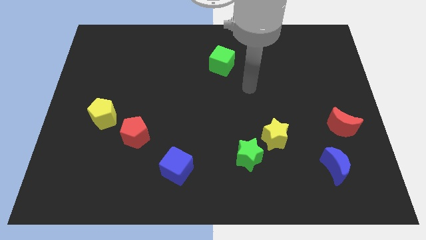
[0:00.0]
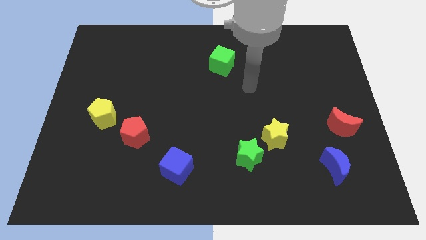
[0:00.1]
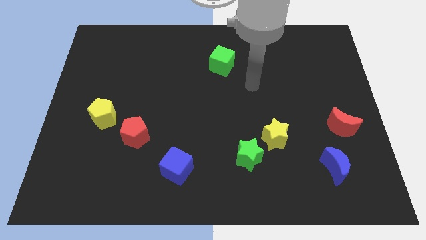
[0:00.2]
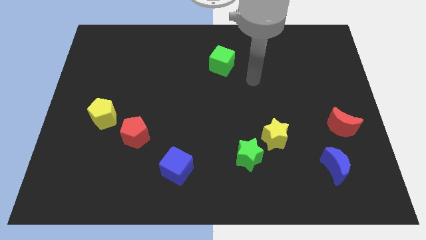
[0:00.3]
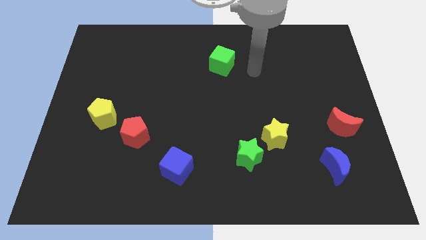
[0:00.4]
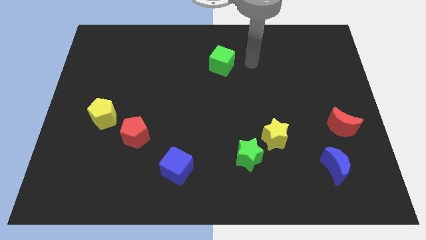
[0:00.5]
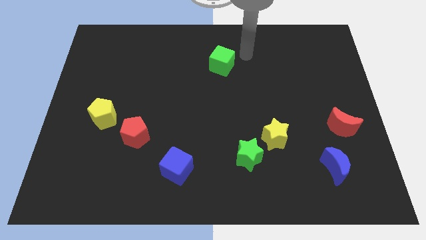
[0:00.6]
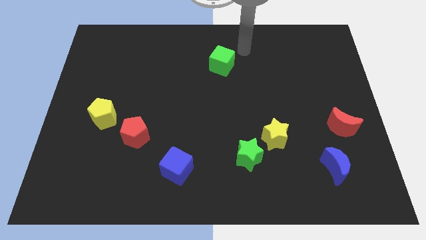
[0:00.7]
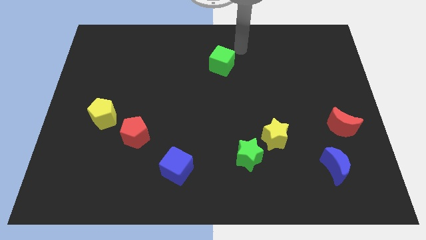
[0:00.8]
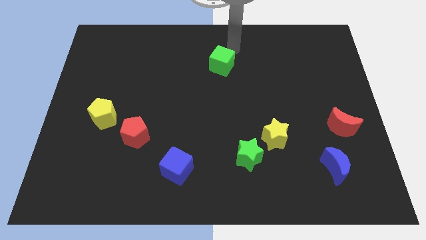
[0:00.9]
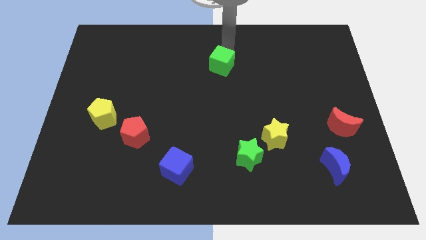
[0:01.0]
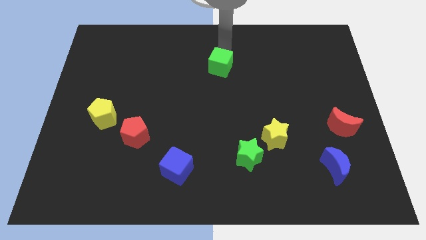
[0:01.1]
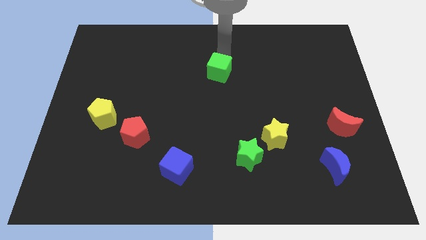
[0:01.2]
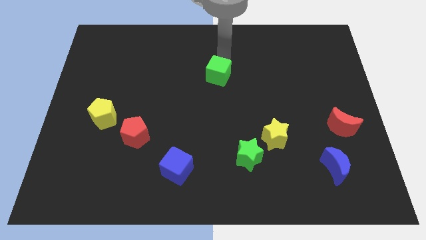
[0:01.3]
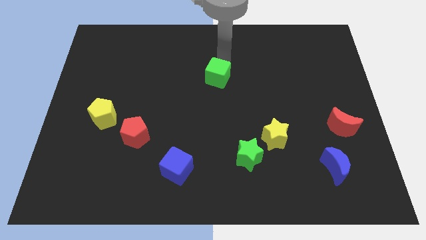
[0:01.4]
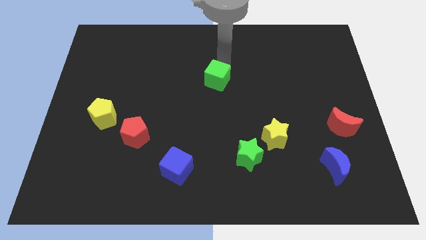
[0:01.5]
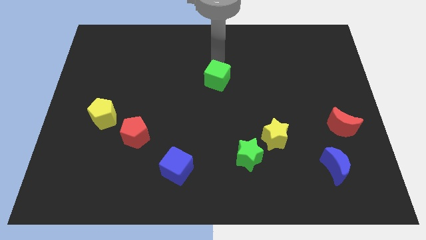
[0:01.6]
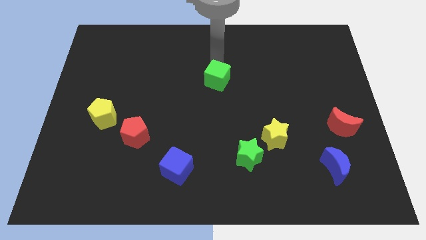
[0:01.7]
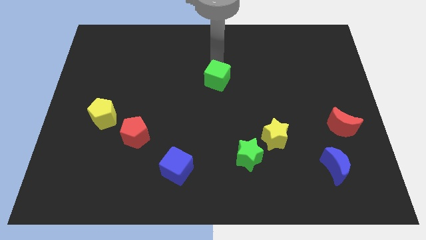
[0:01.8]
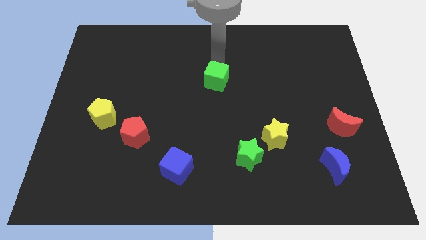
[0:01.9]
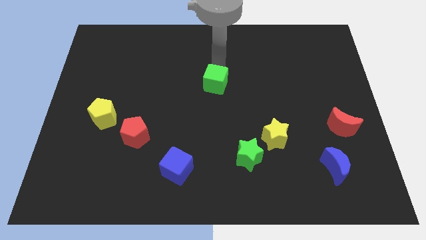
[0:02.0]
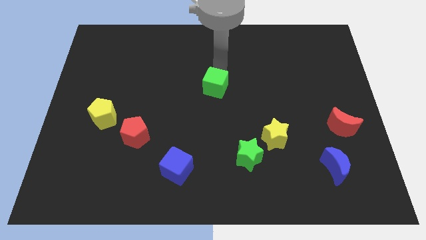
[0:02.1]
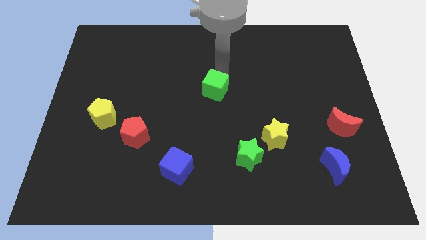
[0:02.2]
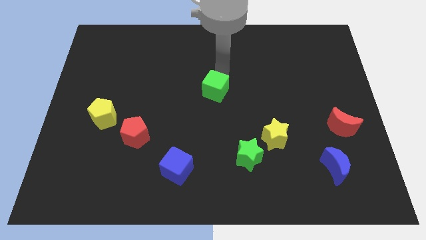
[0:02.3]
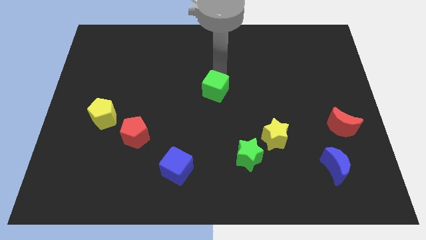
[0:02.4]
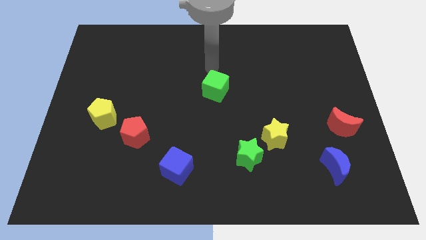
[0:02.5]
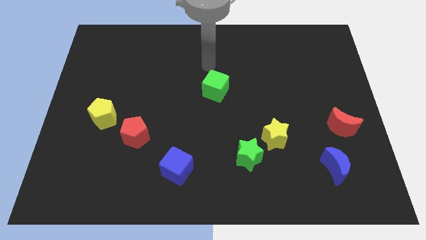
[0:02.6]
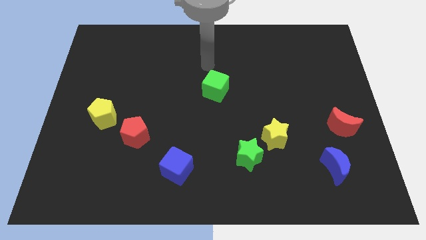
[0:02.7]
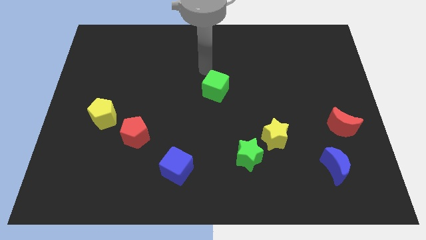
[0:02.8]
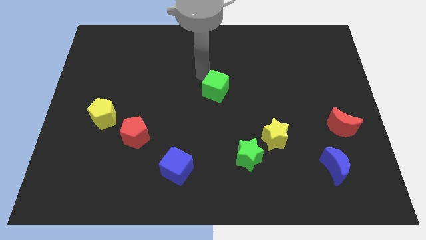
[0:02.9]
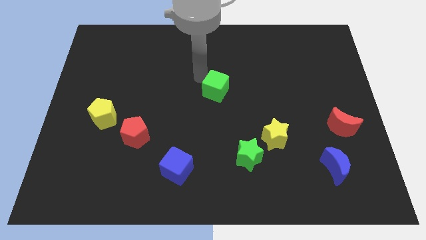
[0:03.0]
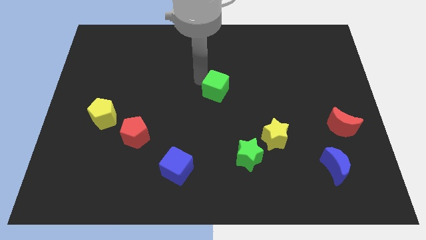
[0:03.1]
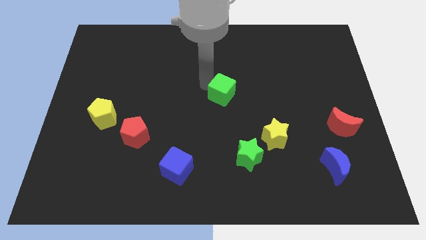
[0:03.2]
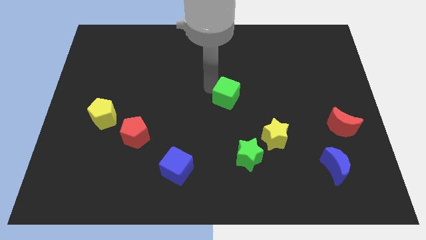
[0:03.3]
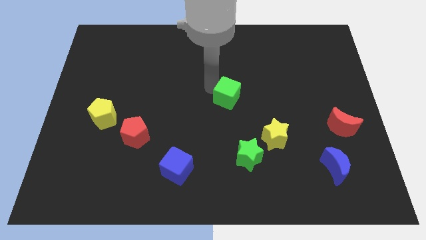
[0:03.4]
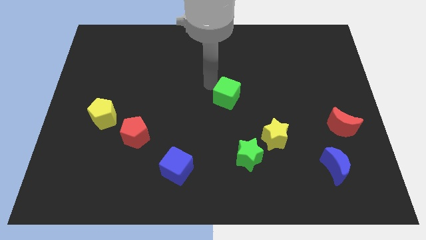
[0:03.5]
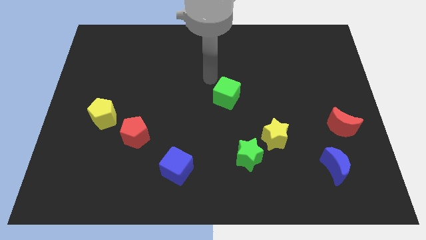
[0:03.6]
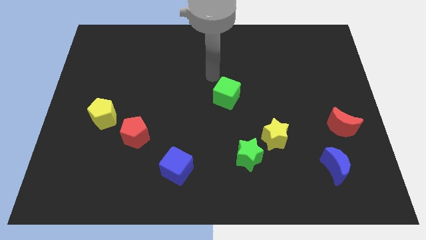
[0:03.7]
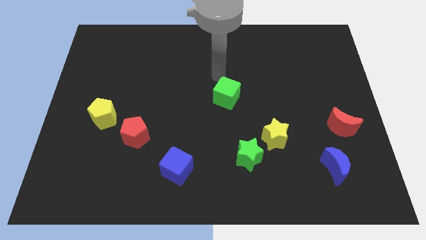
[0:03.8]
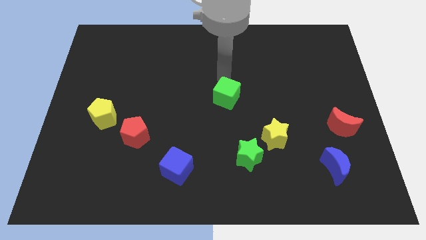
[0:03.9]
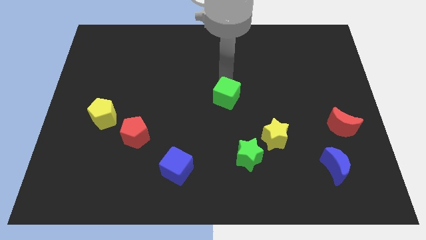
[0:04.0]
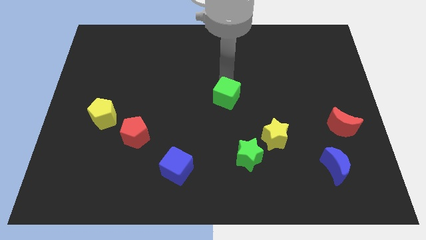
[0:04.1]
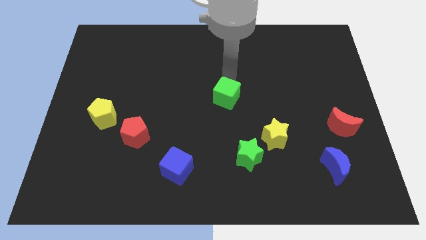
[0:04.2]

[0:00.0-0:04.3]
drag the green cube slightly downwards

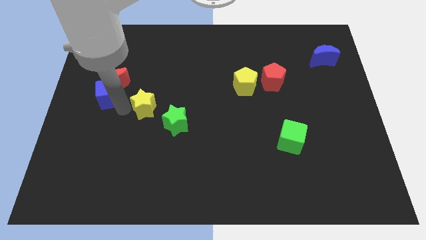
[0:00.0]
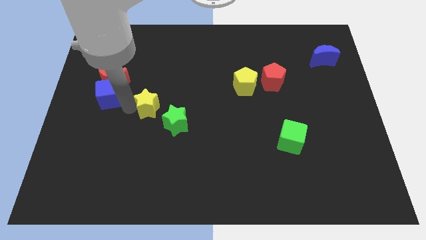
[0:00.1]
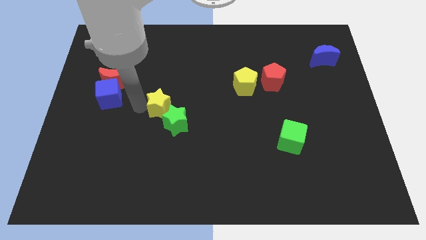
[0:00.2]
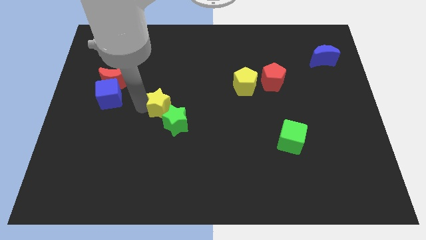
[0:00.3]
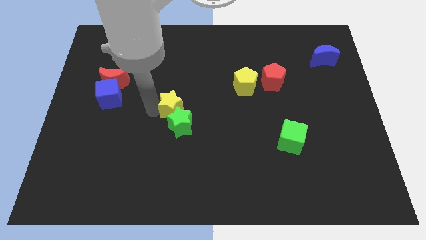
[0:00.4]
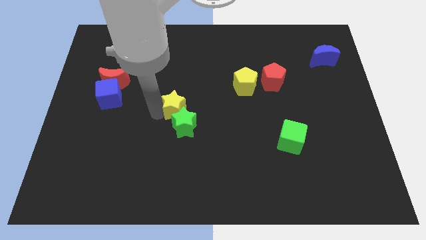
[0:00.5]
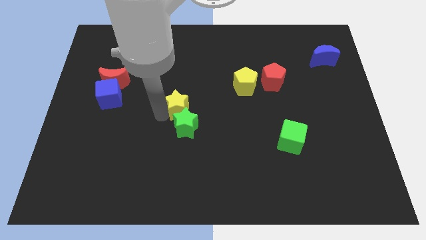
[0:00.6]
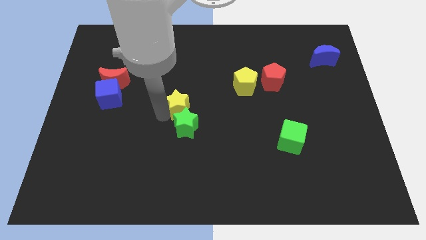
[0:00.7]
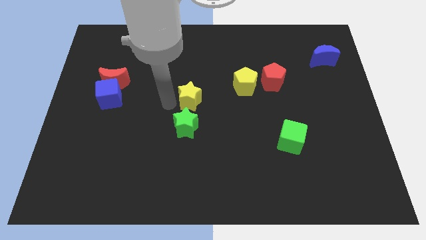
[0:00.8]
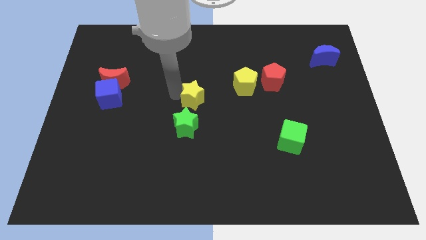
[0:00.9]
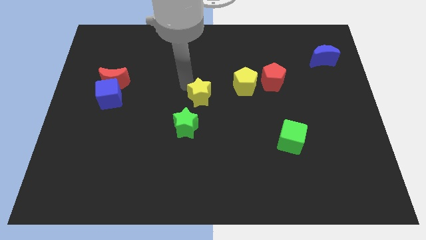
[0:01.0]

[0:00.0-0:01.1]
place the yellow star above the green star

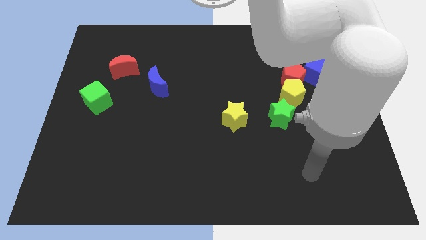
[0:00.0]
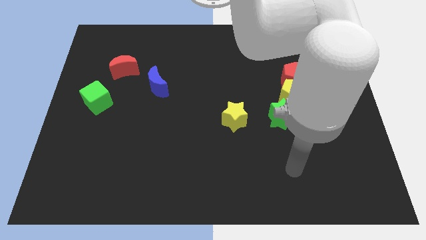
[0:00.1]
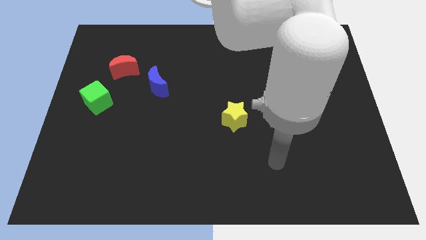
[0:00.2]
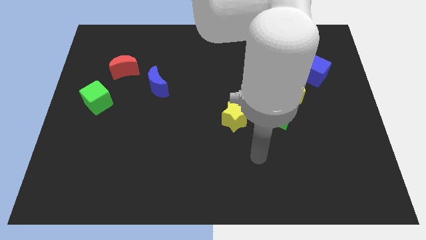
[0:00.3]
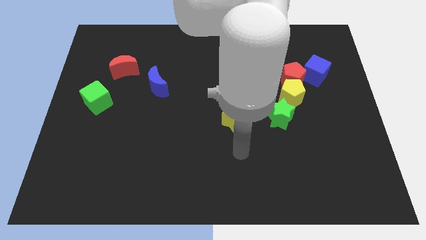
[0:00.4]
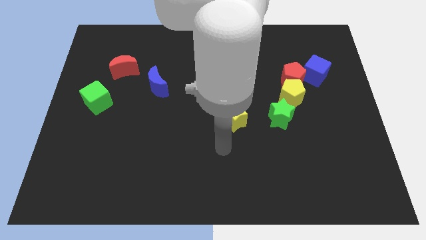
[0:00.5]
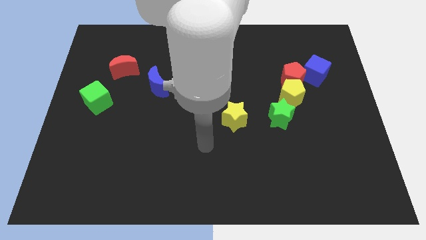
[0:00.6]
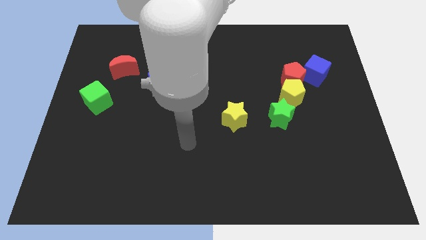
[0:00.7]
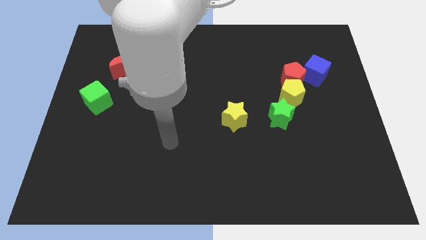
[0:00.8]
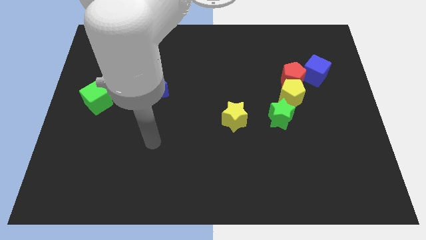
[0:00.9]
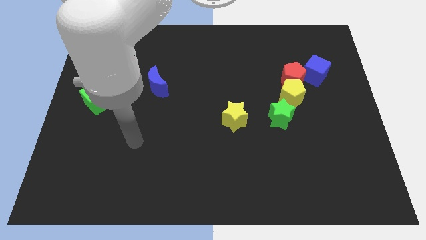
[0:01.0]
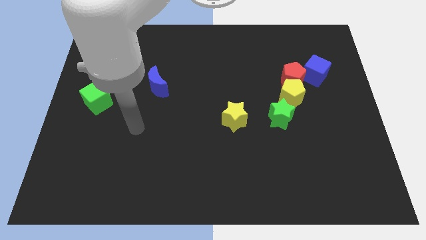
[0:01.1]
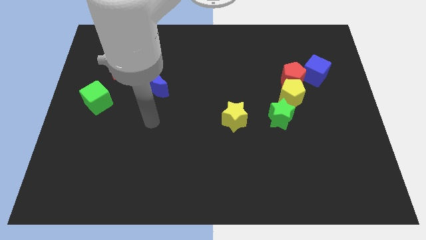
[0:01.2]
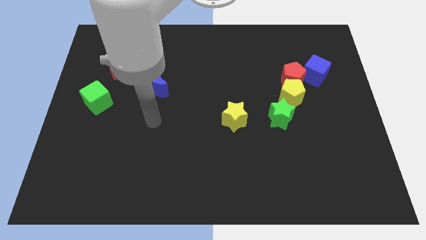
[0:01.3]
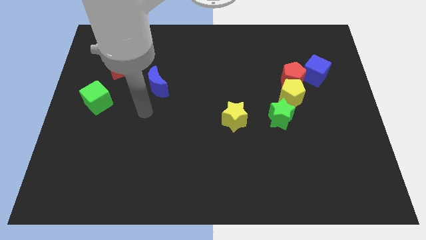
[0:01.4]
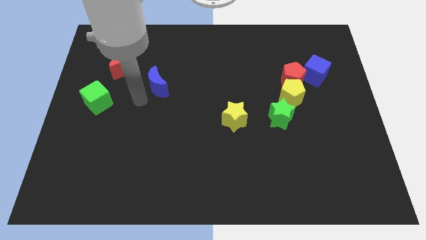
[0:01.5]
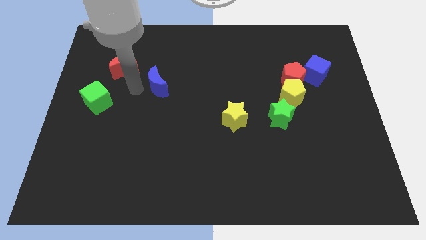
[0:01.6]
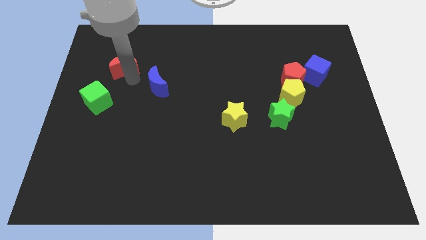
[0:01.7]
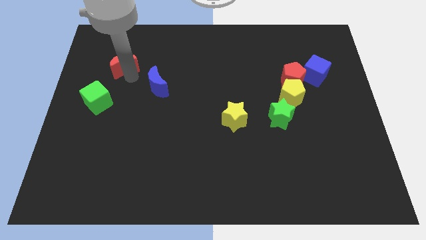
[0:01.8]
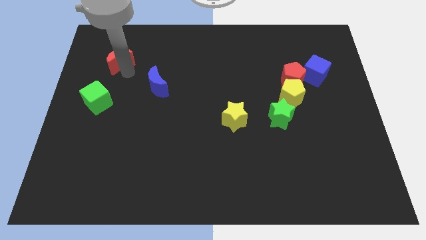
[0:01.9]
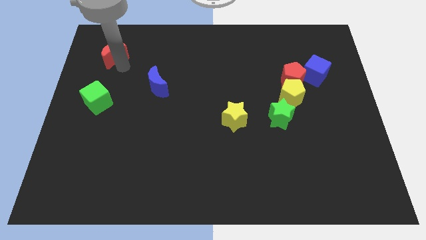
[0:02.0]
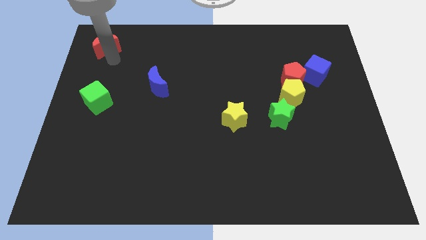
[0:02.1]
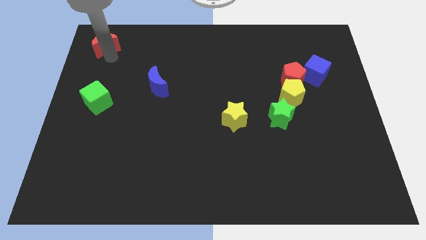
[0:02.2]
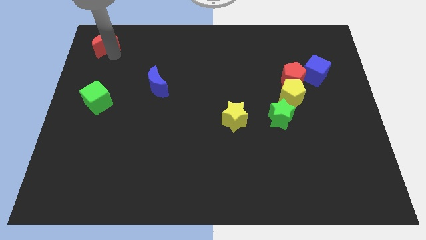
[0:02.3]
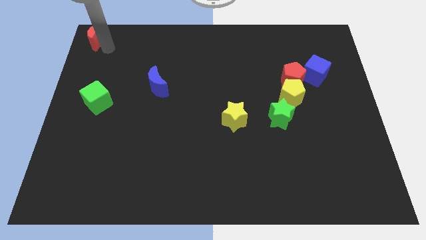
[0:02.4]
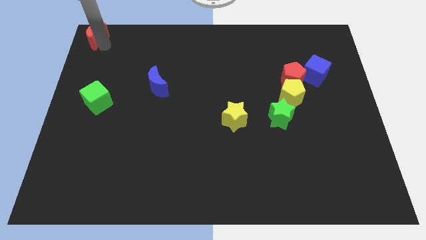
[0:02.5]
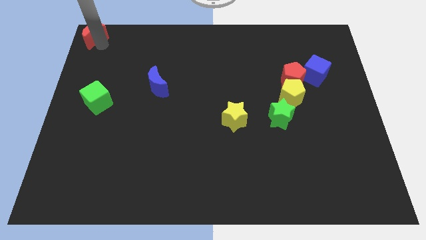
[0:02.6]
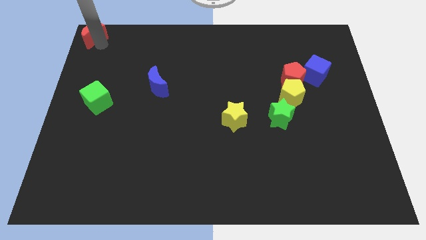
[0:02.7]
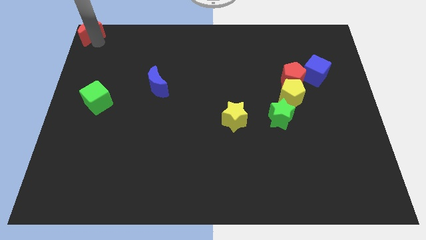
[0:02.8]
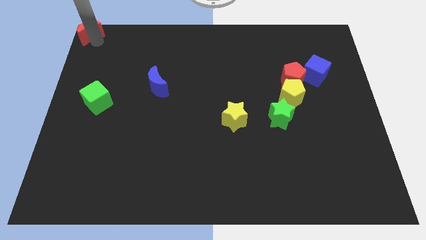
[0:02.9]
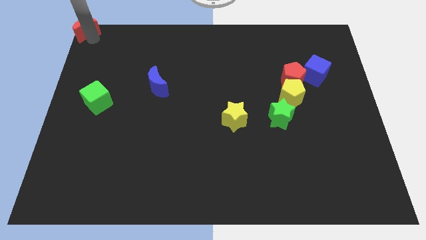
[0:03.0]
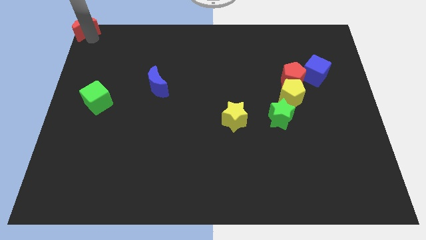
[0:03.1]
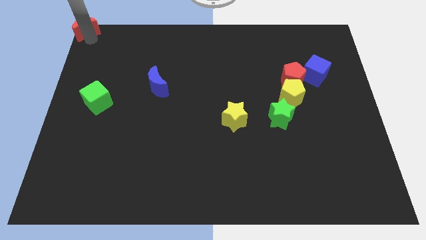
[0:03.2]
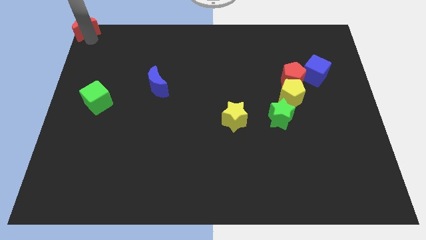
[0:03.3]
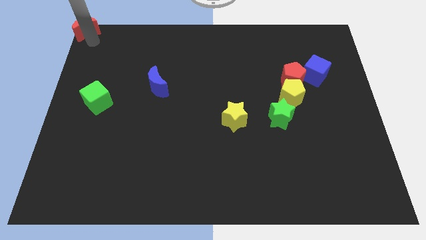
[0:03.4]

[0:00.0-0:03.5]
move your arm towards the bottom right of the red moon

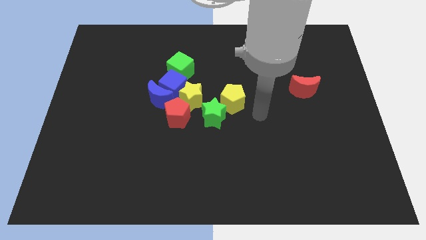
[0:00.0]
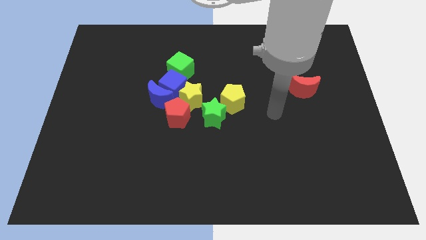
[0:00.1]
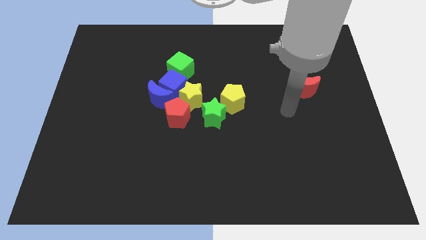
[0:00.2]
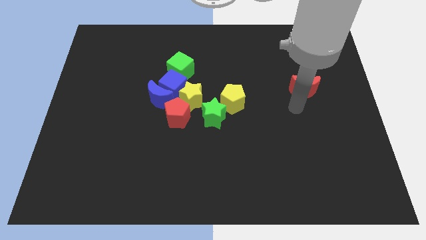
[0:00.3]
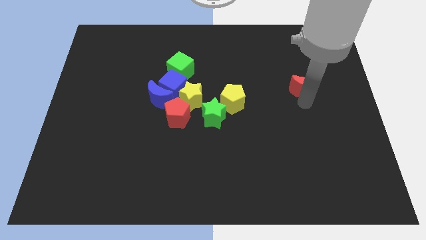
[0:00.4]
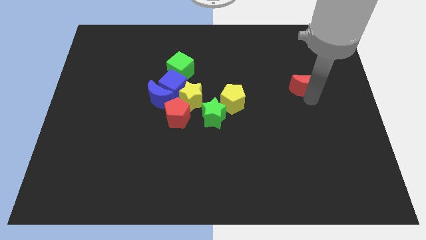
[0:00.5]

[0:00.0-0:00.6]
tap on the bottom of the red crescent
